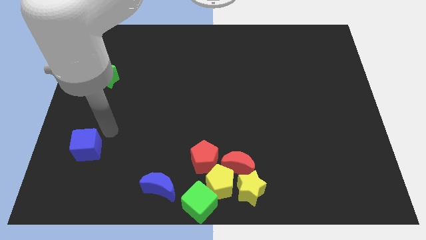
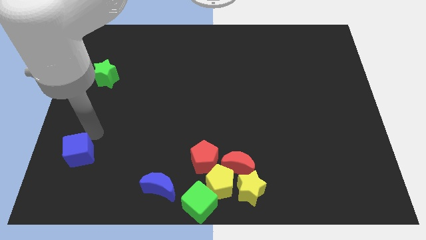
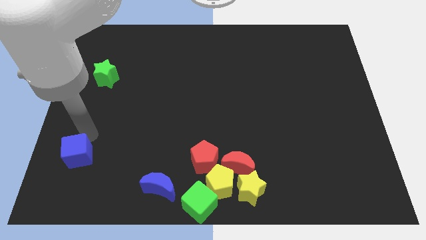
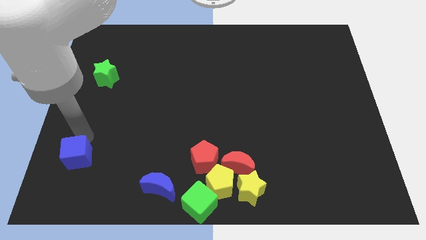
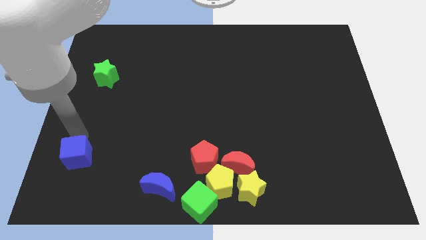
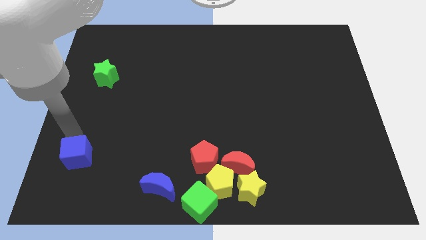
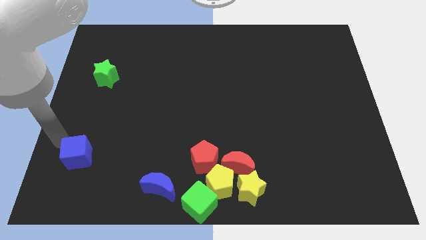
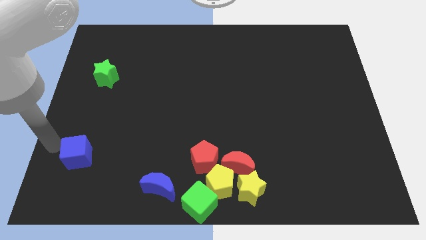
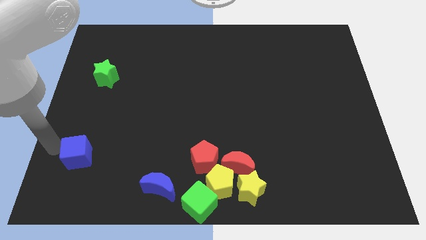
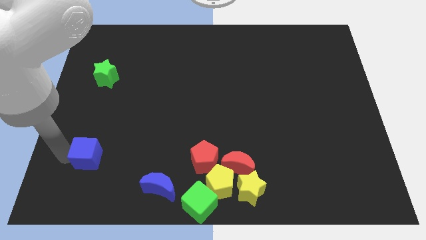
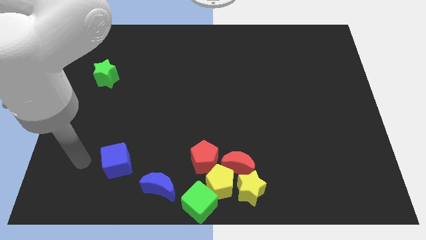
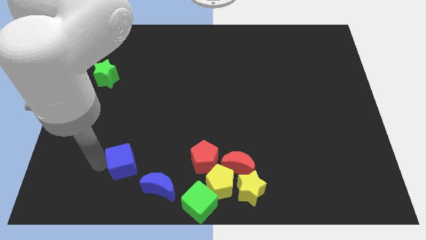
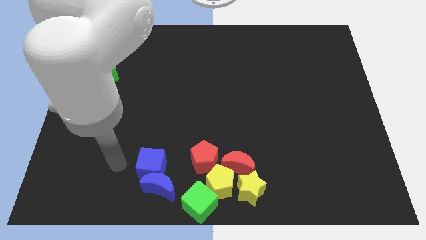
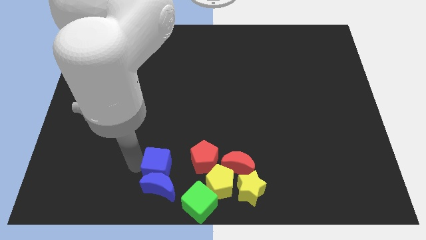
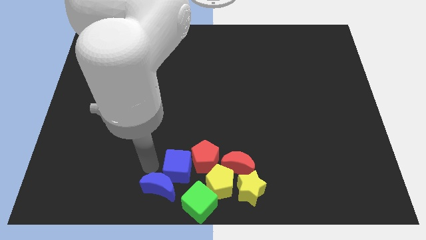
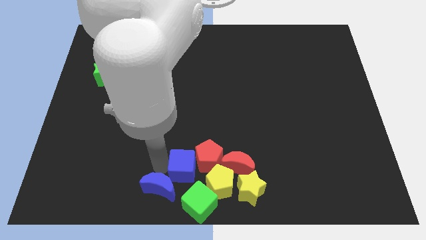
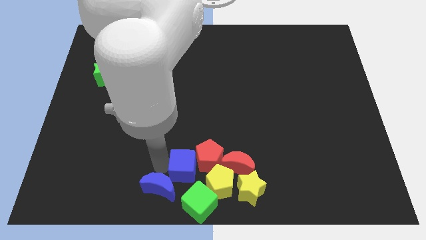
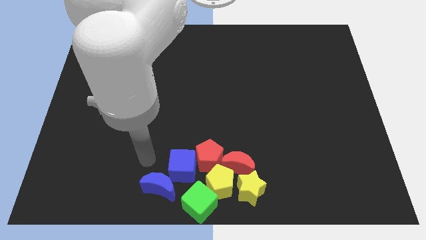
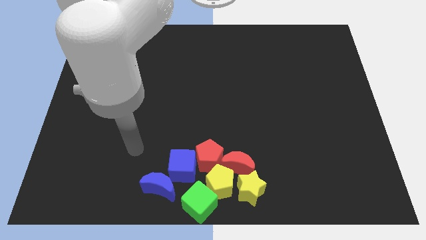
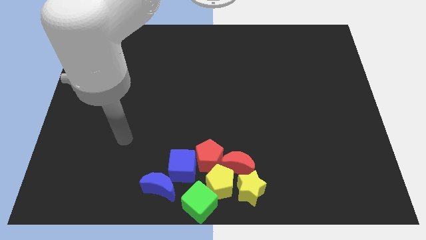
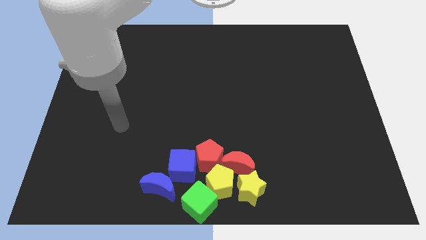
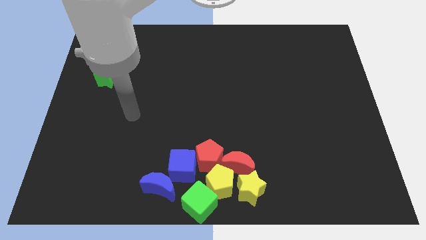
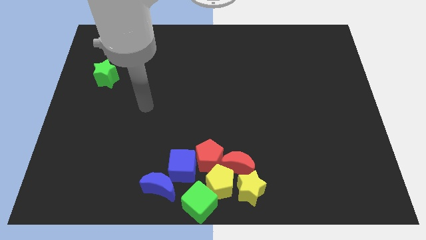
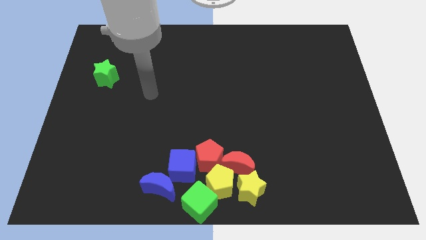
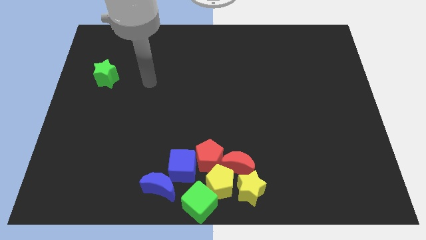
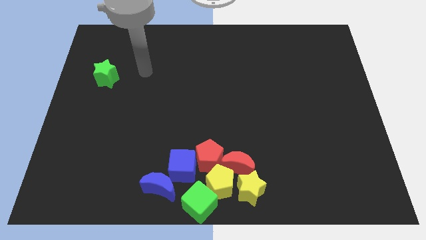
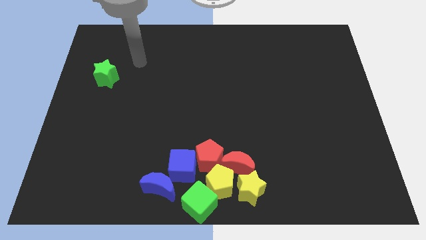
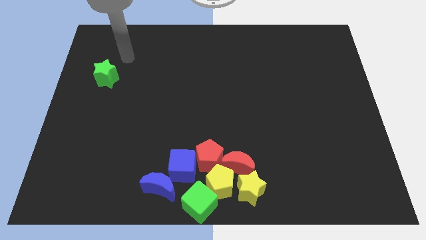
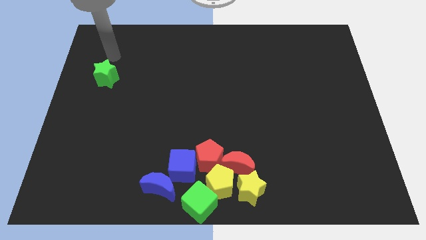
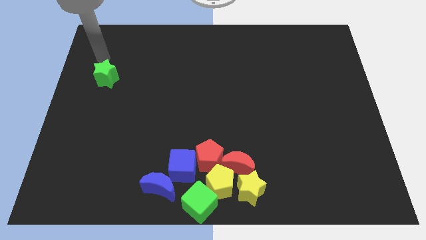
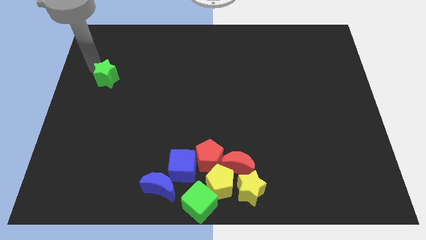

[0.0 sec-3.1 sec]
place the blue cube above the blue crescent

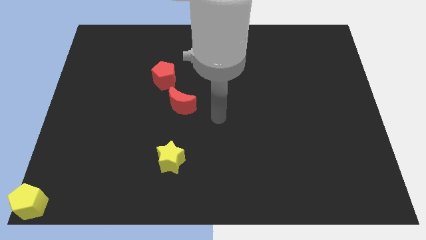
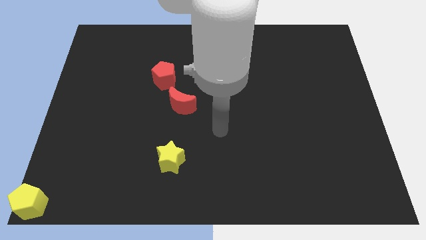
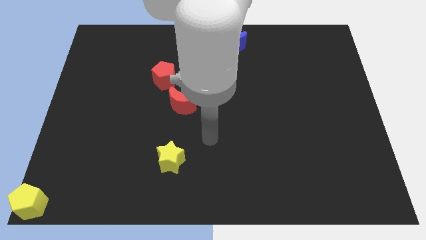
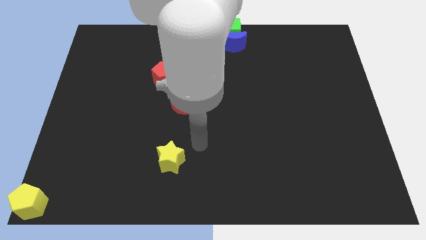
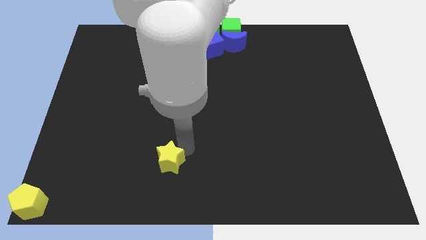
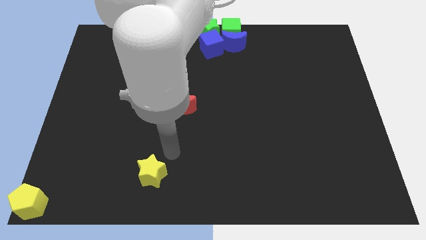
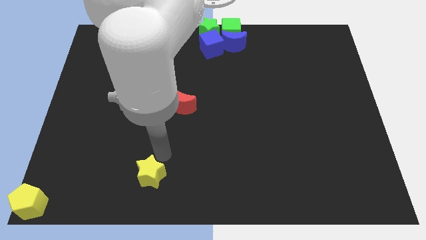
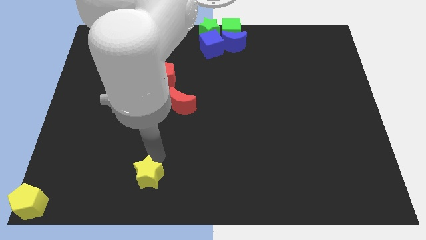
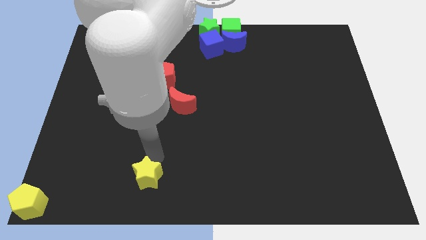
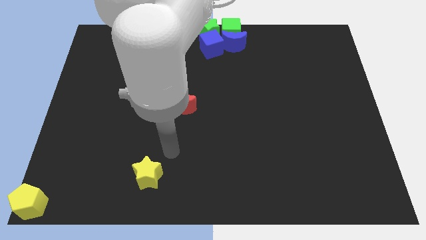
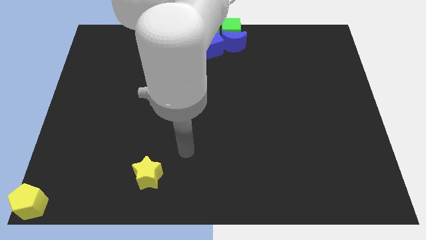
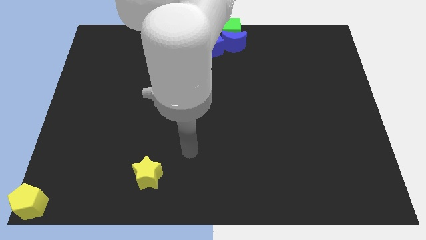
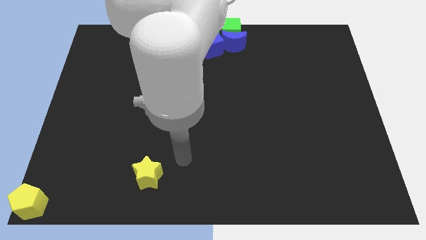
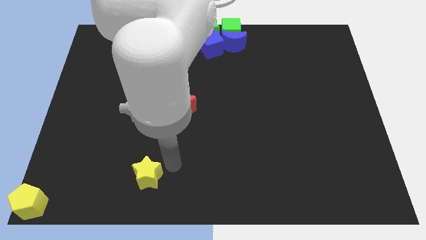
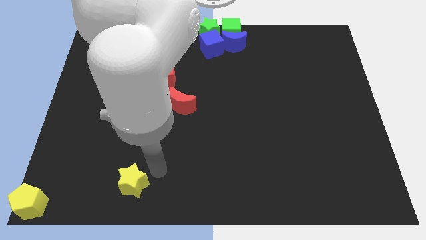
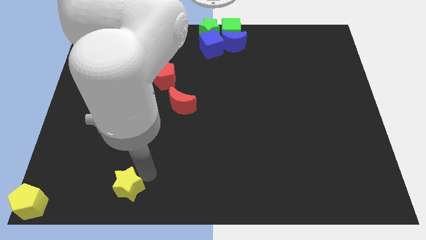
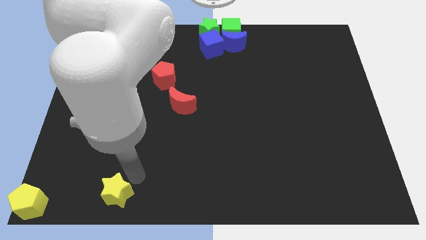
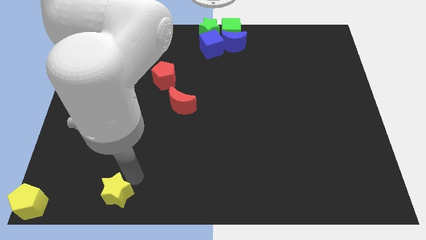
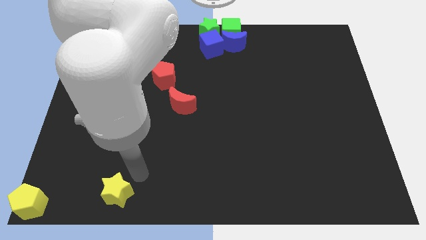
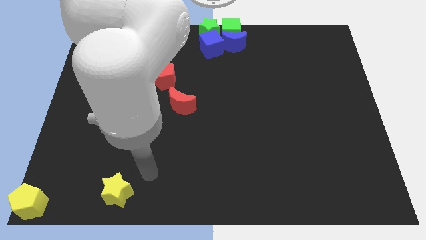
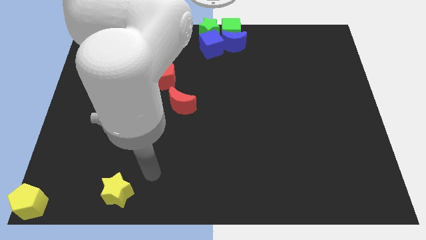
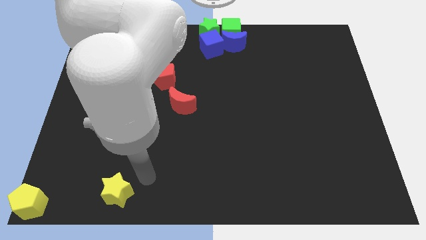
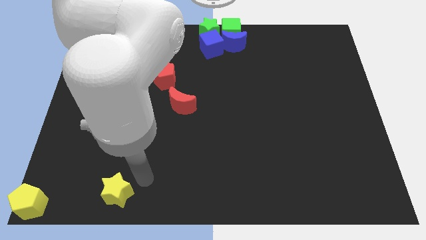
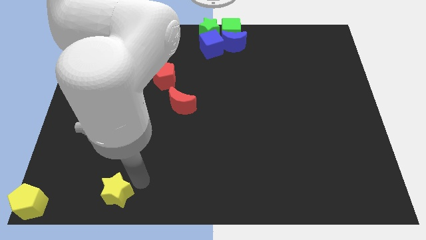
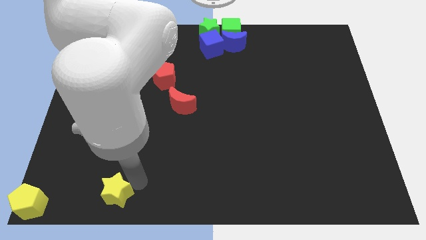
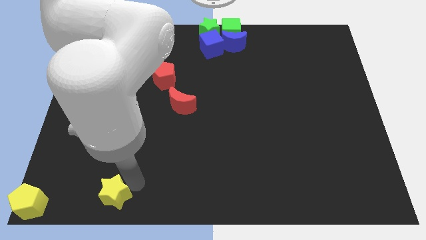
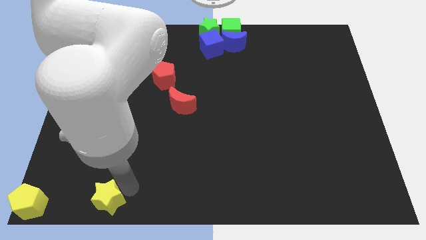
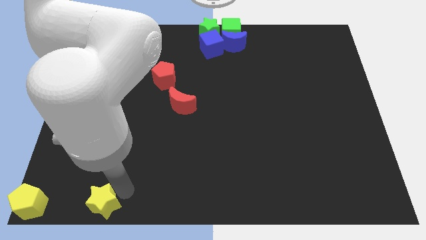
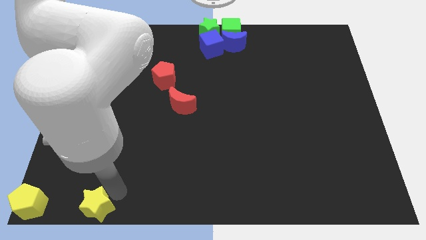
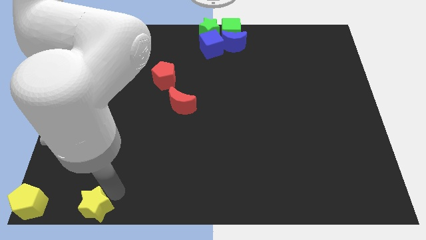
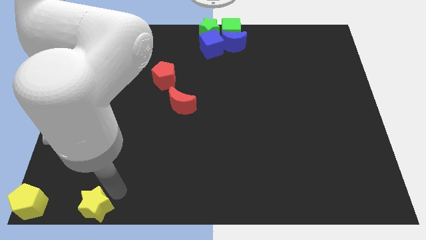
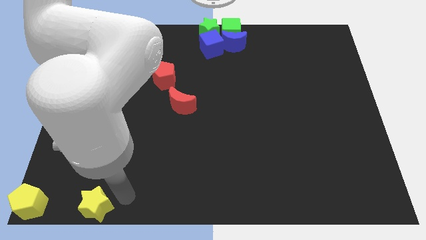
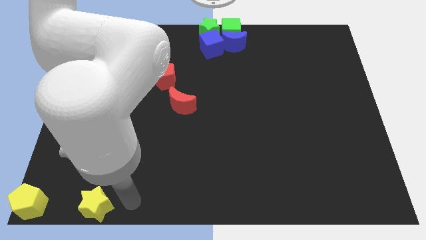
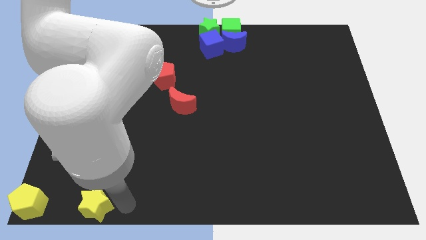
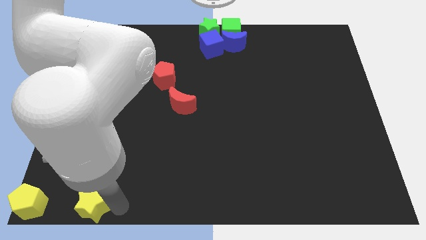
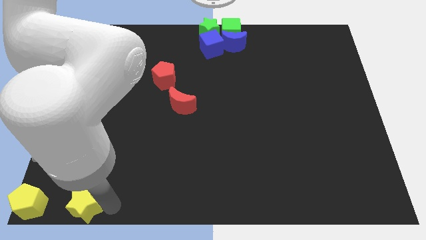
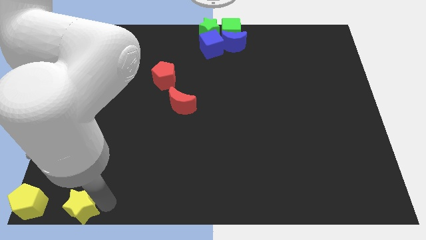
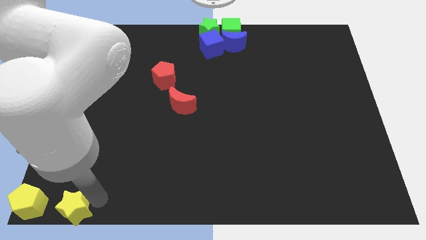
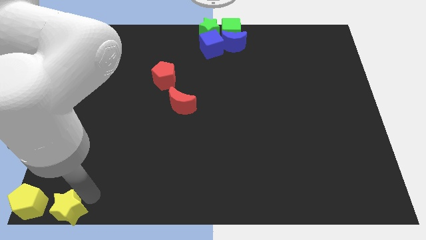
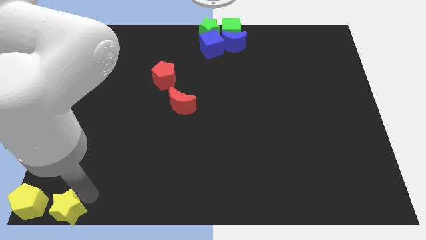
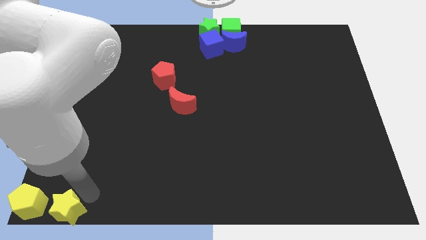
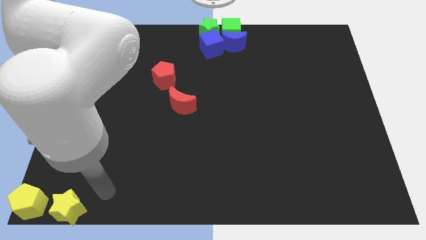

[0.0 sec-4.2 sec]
place the yellow star towards the right side of yellow pentagon

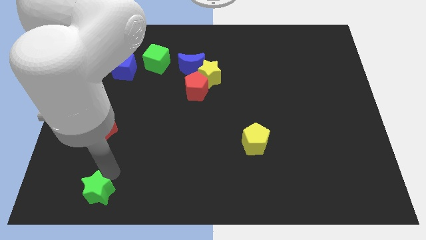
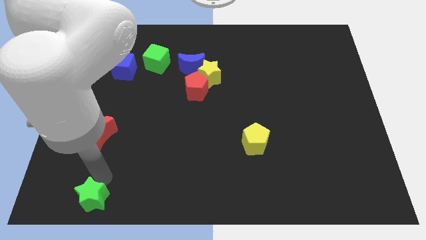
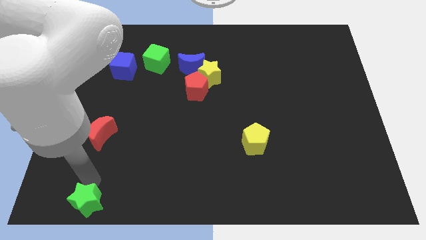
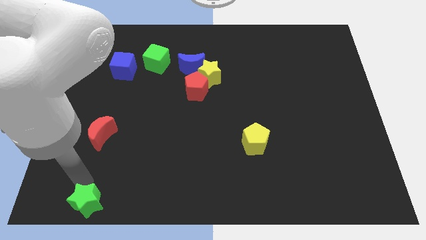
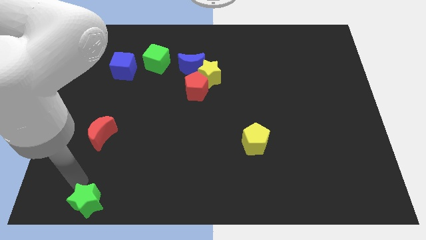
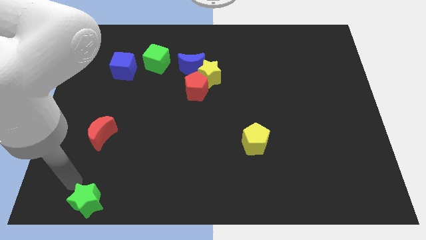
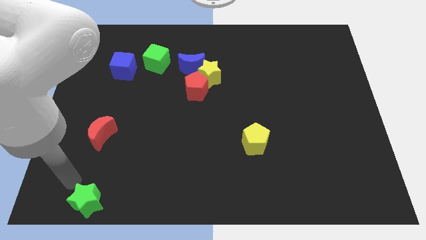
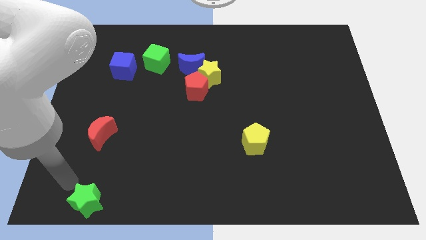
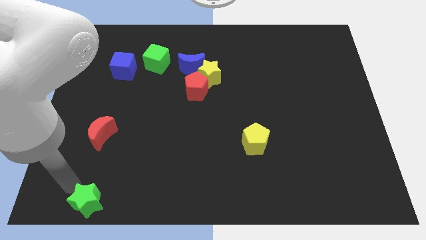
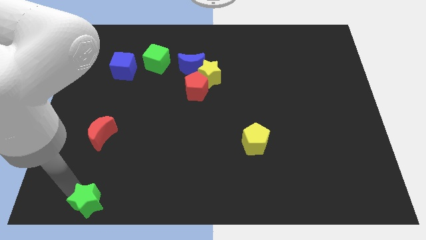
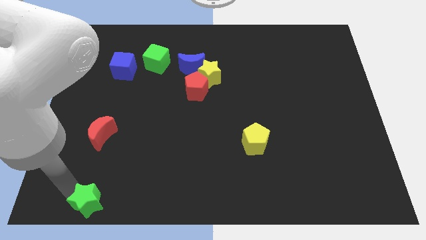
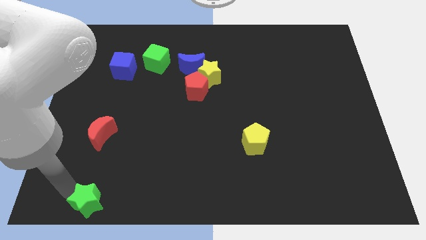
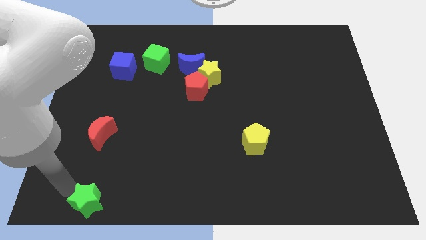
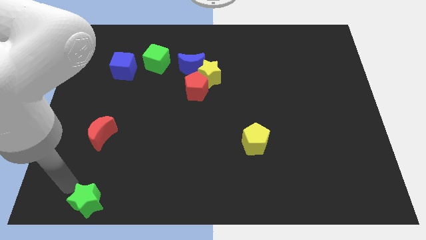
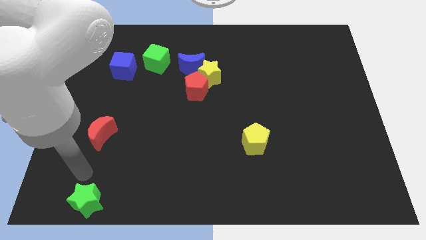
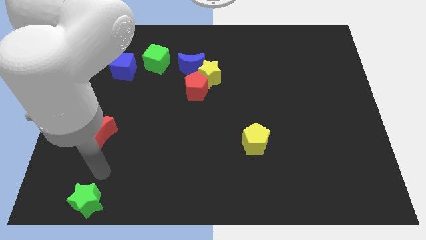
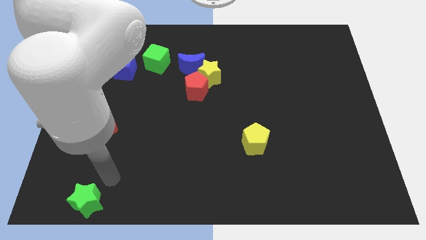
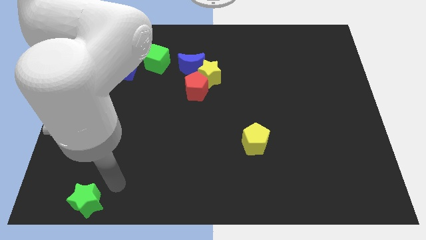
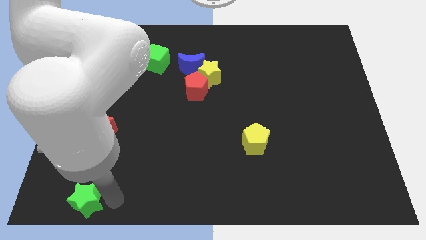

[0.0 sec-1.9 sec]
push the green star towards the down of the board
